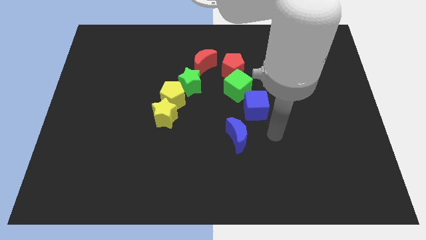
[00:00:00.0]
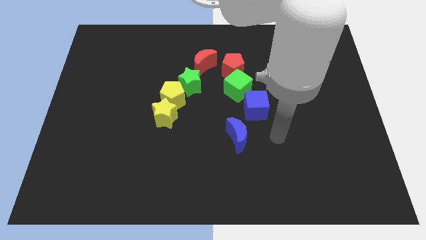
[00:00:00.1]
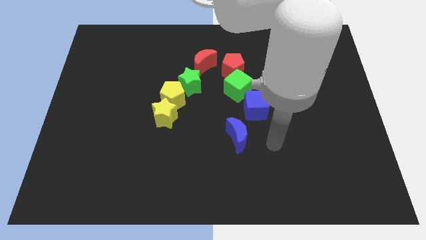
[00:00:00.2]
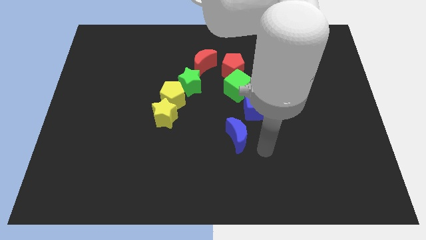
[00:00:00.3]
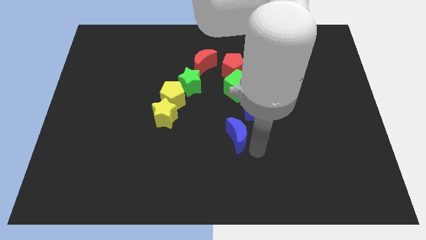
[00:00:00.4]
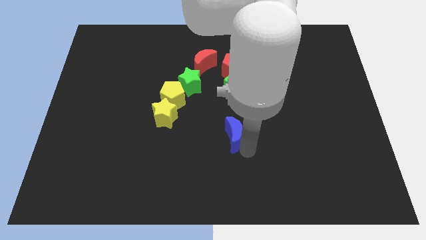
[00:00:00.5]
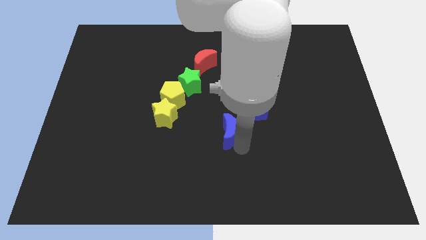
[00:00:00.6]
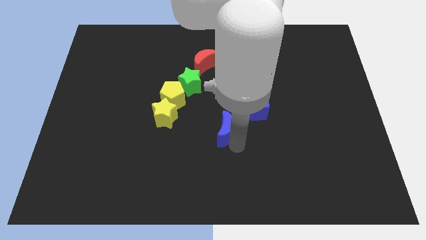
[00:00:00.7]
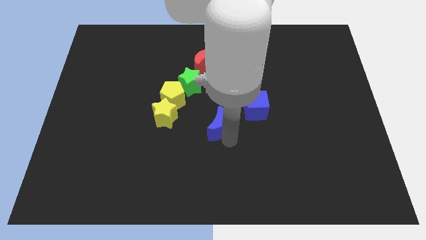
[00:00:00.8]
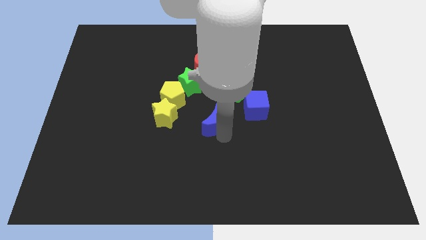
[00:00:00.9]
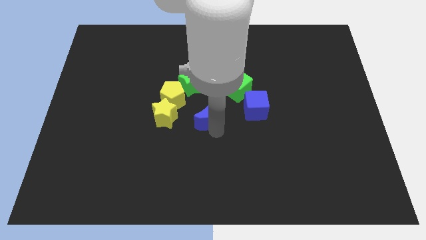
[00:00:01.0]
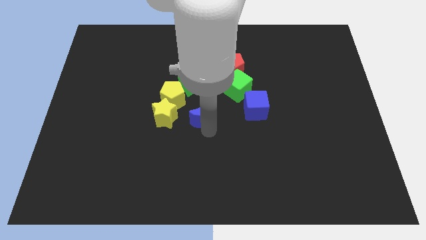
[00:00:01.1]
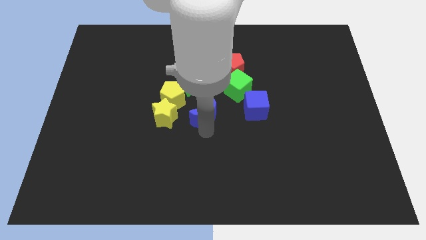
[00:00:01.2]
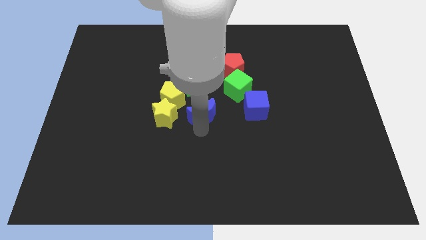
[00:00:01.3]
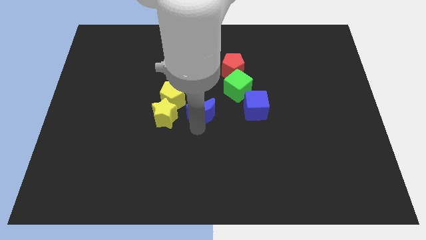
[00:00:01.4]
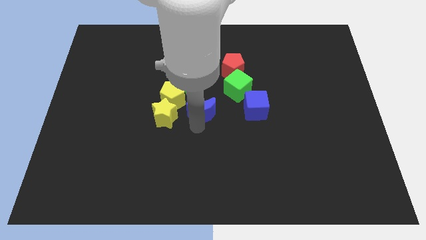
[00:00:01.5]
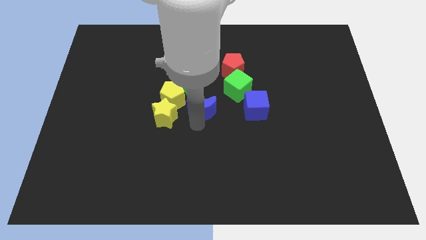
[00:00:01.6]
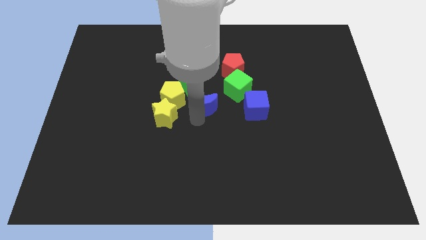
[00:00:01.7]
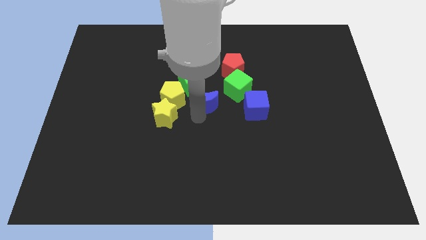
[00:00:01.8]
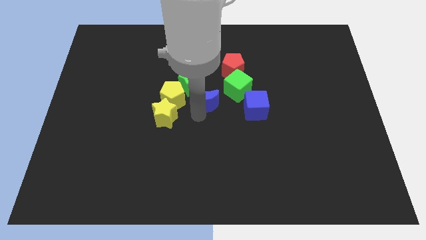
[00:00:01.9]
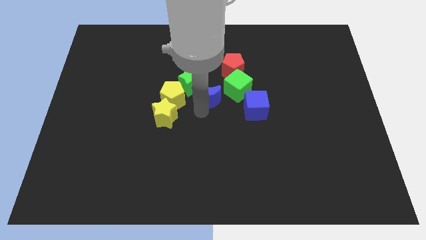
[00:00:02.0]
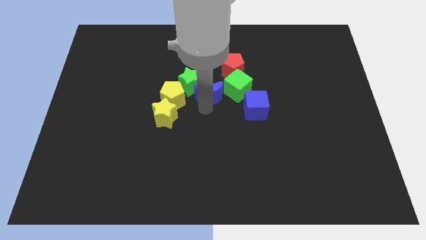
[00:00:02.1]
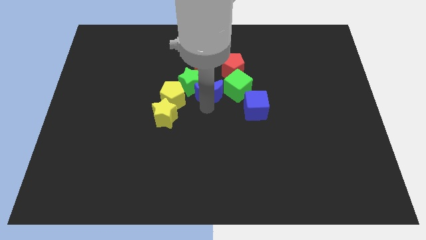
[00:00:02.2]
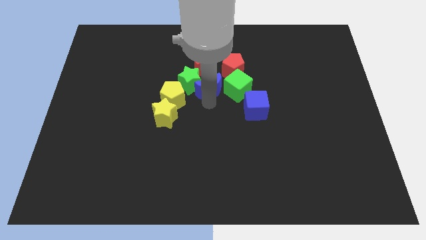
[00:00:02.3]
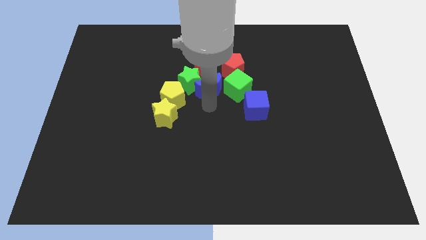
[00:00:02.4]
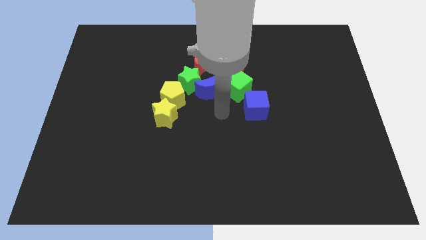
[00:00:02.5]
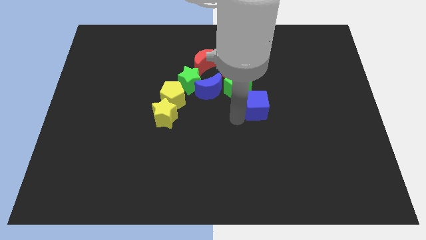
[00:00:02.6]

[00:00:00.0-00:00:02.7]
push the blue crescent to the left of the green cube

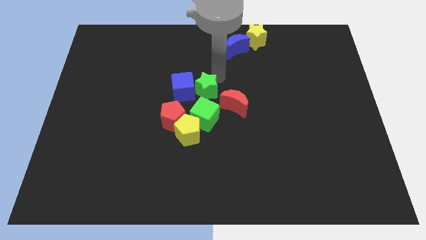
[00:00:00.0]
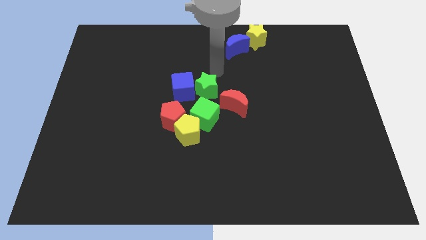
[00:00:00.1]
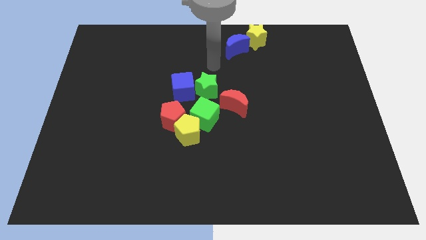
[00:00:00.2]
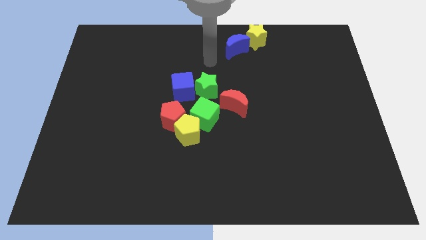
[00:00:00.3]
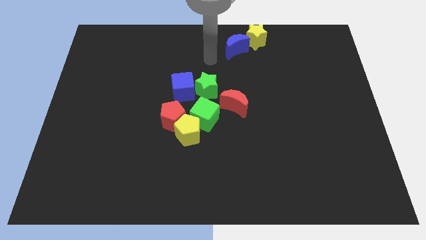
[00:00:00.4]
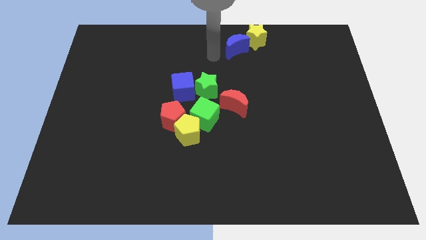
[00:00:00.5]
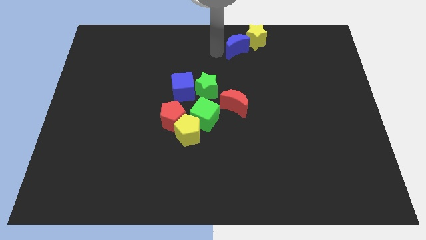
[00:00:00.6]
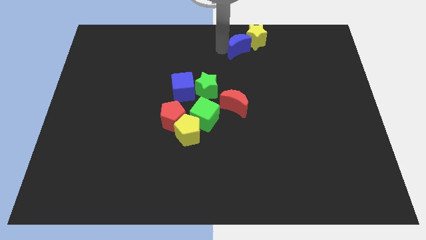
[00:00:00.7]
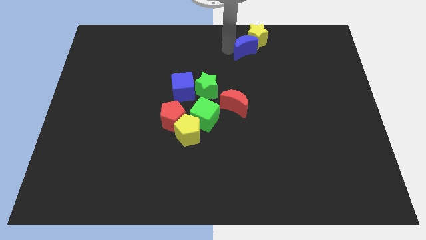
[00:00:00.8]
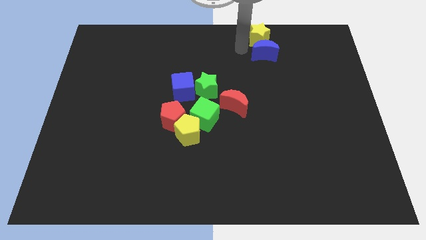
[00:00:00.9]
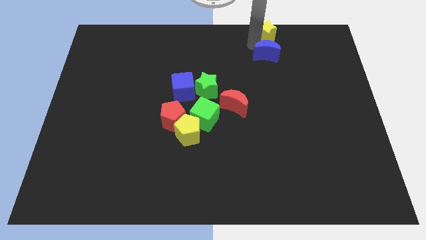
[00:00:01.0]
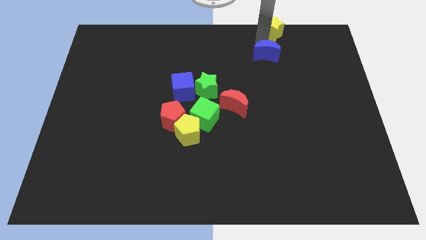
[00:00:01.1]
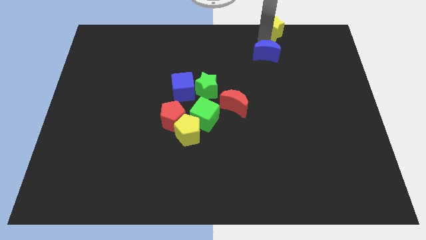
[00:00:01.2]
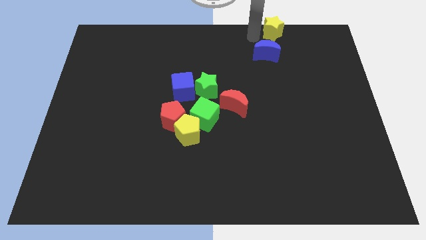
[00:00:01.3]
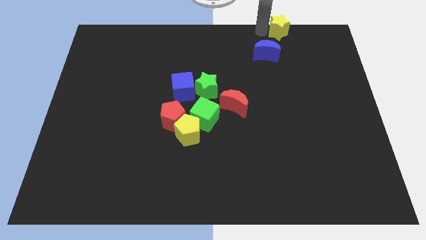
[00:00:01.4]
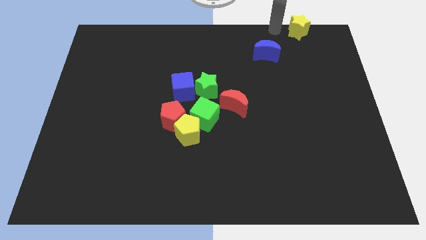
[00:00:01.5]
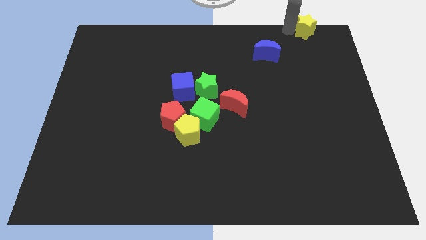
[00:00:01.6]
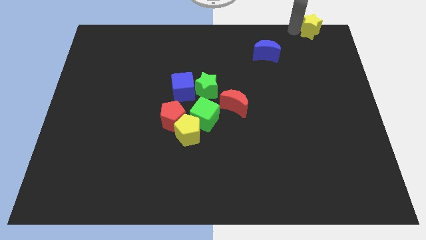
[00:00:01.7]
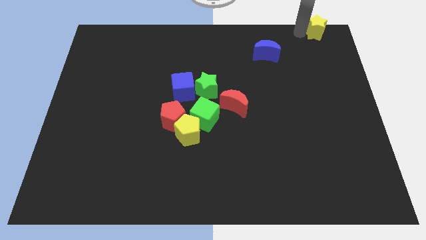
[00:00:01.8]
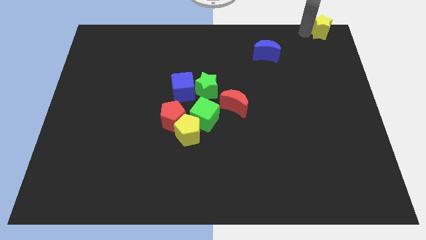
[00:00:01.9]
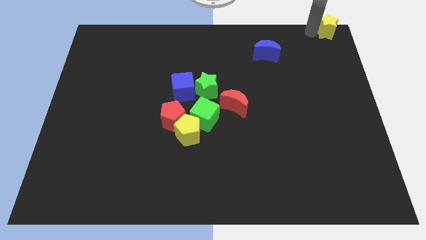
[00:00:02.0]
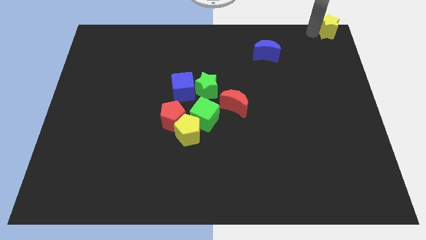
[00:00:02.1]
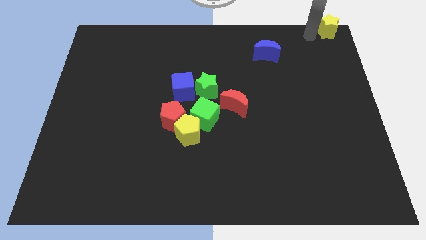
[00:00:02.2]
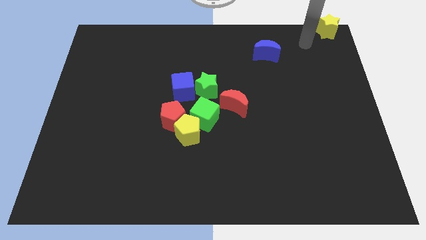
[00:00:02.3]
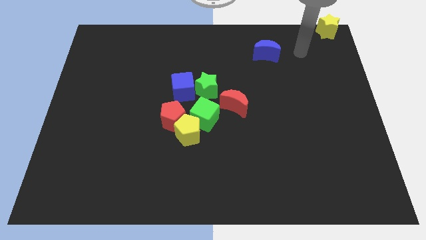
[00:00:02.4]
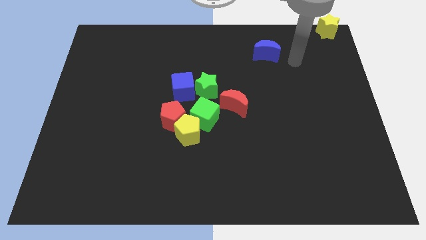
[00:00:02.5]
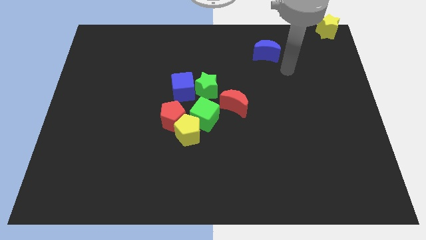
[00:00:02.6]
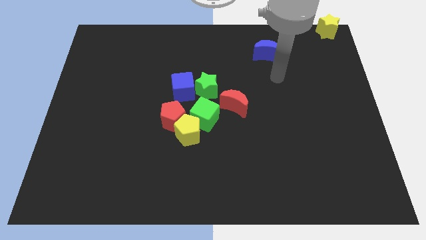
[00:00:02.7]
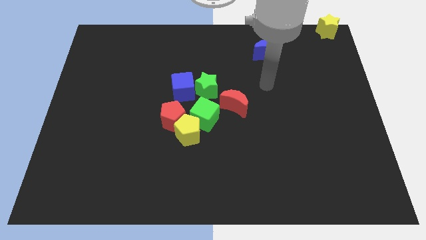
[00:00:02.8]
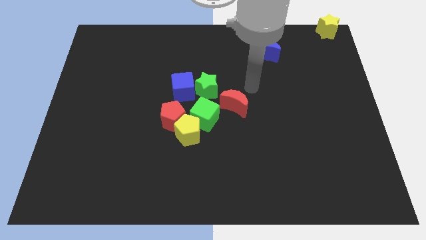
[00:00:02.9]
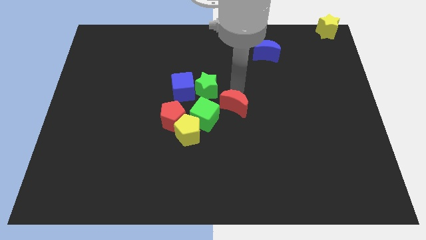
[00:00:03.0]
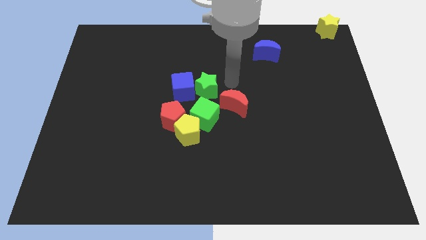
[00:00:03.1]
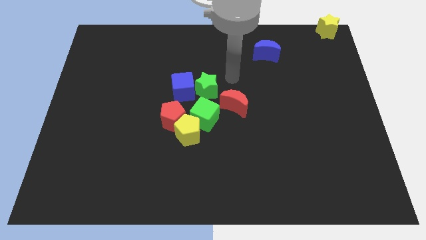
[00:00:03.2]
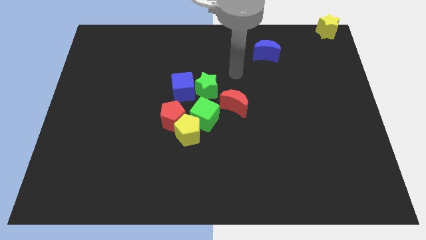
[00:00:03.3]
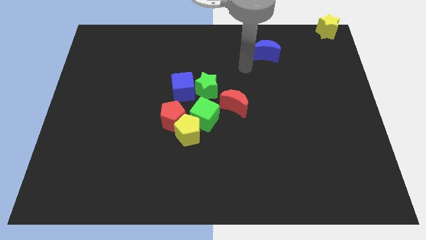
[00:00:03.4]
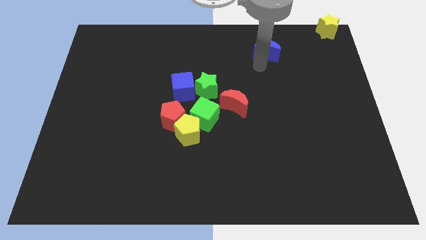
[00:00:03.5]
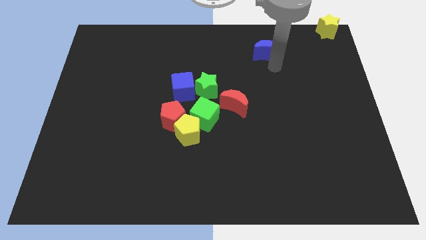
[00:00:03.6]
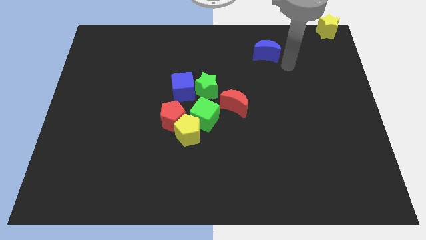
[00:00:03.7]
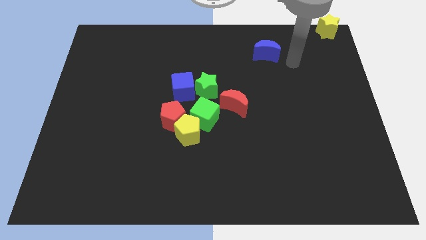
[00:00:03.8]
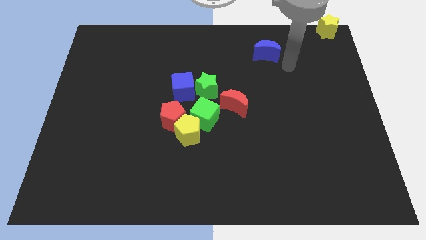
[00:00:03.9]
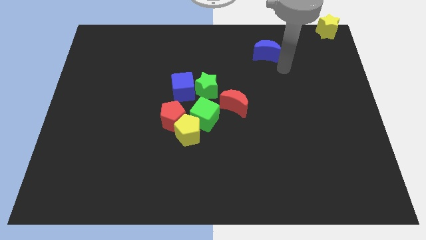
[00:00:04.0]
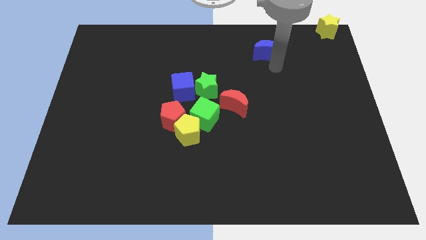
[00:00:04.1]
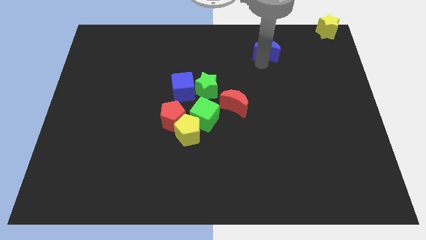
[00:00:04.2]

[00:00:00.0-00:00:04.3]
push the yellow star to the top right corner of the board

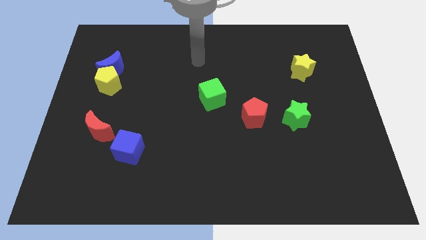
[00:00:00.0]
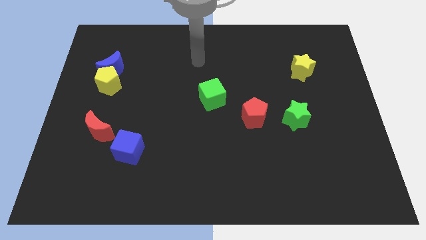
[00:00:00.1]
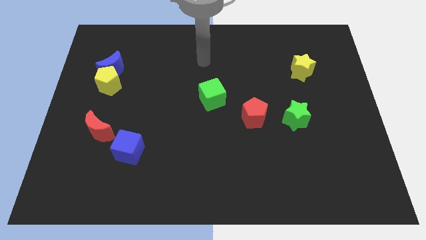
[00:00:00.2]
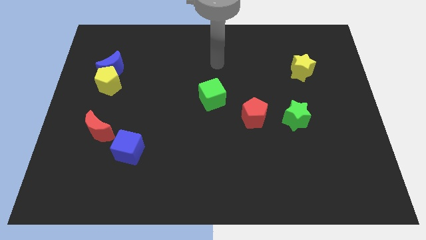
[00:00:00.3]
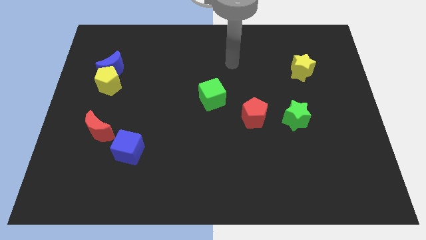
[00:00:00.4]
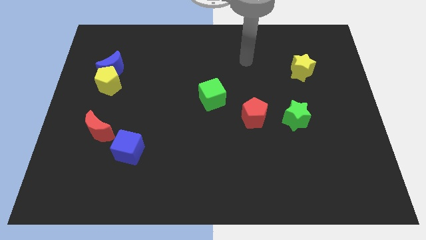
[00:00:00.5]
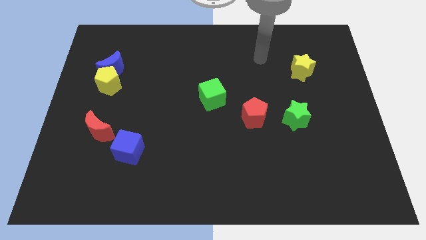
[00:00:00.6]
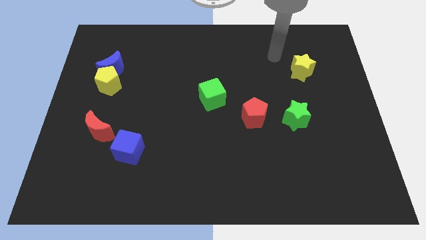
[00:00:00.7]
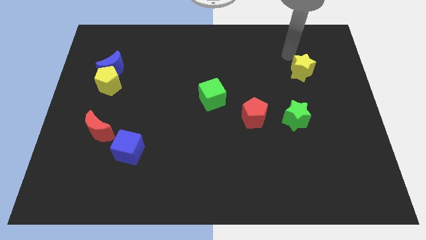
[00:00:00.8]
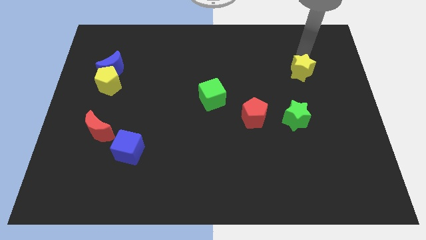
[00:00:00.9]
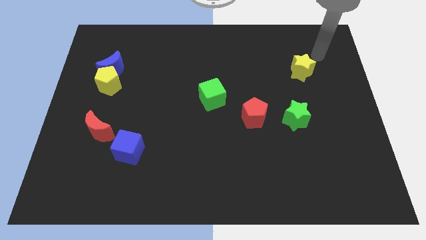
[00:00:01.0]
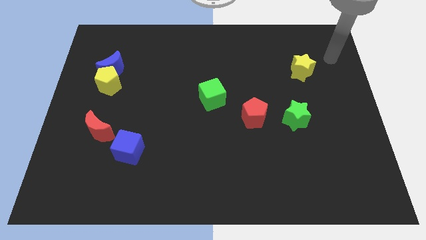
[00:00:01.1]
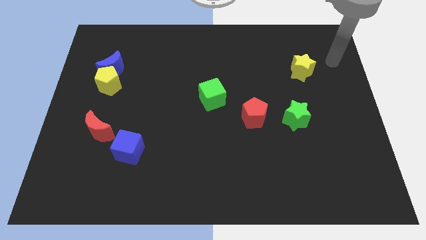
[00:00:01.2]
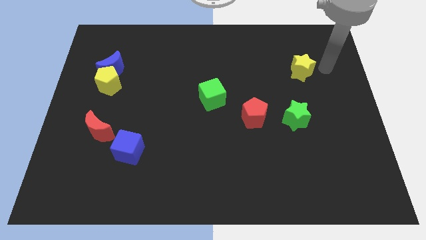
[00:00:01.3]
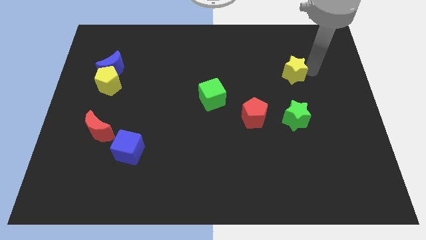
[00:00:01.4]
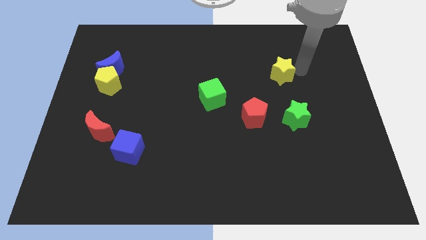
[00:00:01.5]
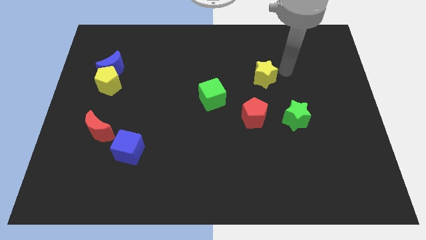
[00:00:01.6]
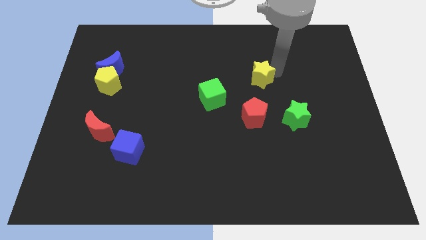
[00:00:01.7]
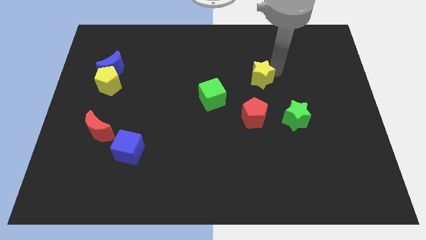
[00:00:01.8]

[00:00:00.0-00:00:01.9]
push the yellow star on top of red pentagon
